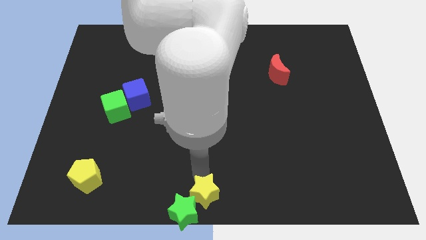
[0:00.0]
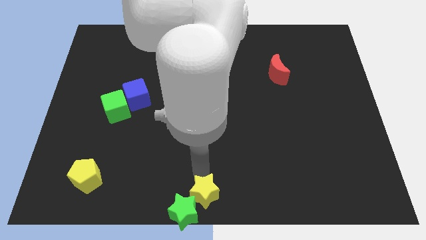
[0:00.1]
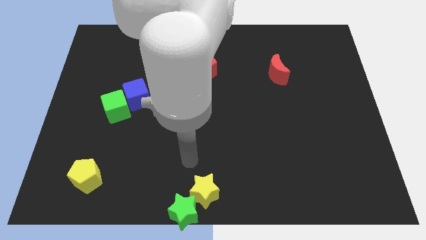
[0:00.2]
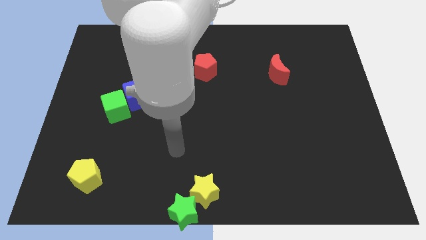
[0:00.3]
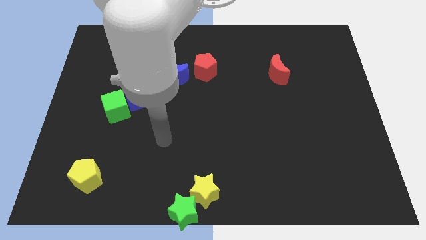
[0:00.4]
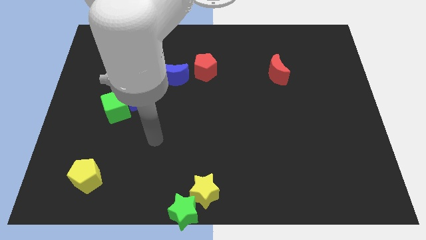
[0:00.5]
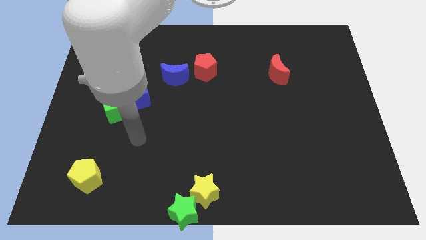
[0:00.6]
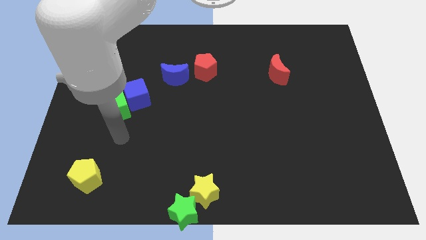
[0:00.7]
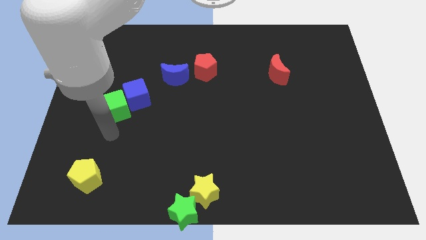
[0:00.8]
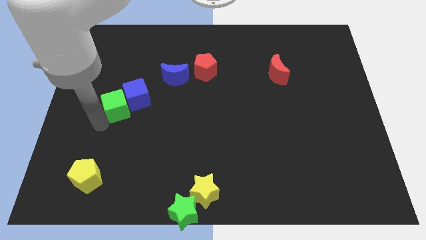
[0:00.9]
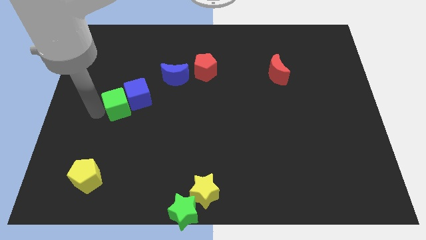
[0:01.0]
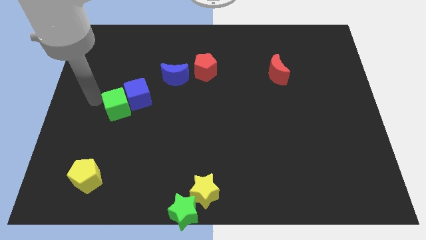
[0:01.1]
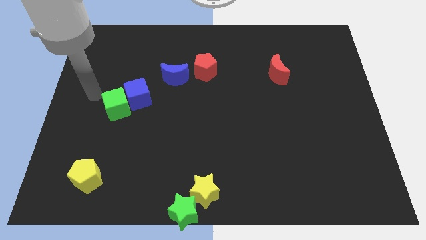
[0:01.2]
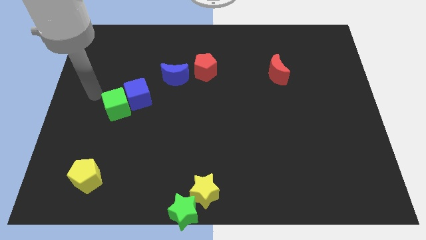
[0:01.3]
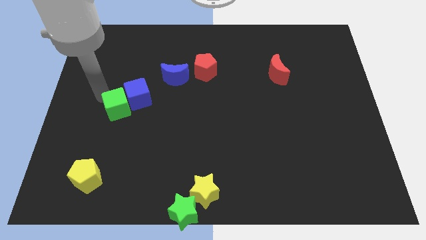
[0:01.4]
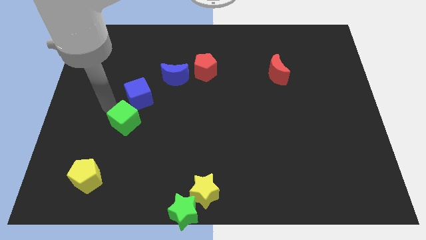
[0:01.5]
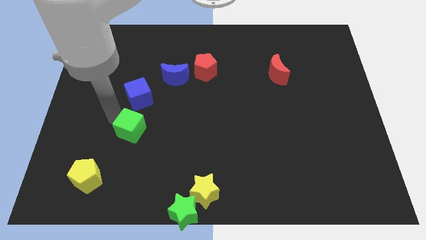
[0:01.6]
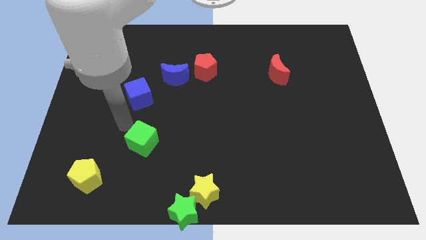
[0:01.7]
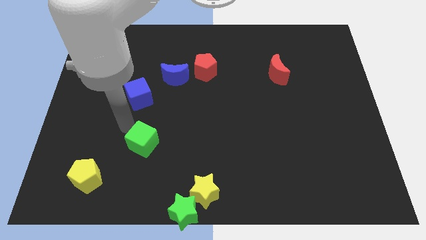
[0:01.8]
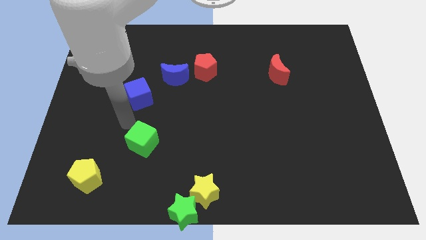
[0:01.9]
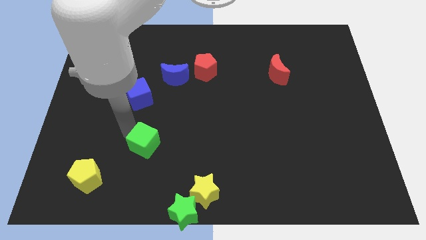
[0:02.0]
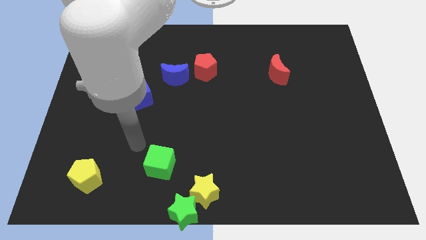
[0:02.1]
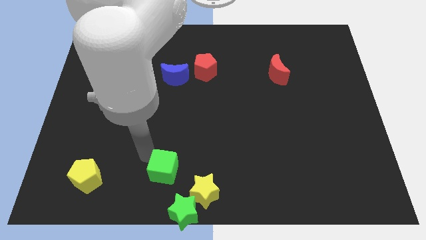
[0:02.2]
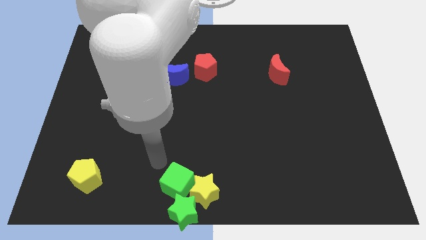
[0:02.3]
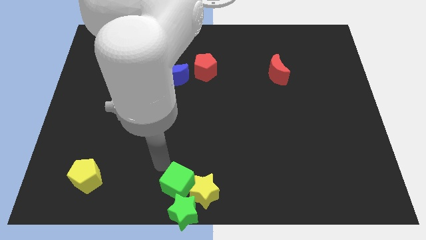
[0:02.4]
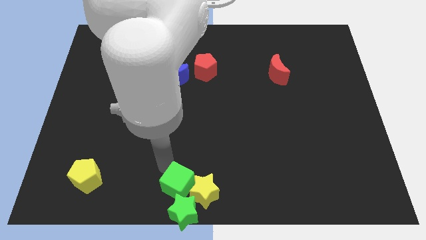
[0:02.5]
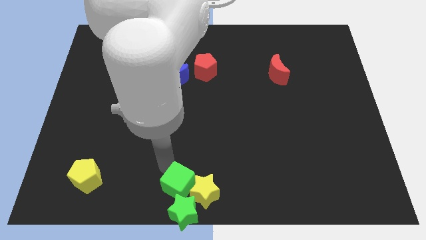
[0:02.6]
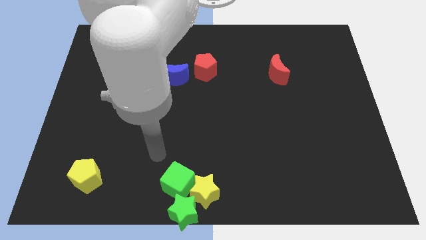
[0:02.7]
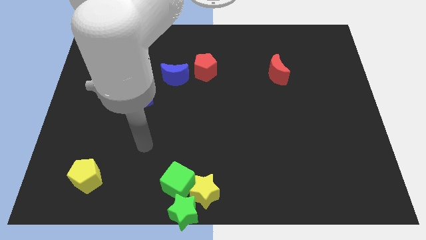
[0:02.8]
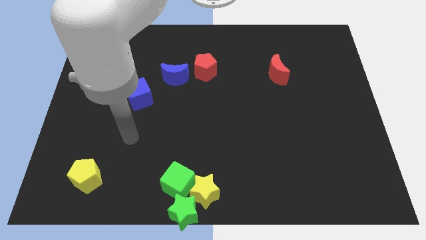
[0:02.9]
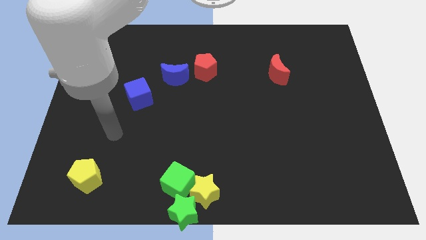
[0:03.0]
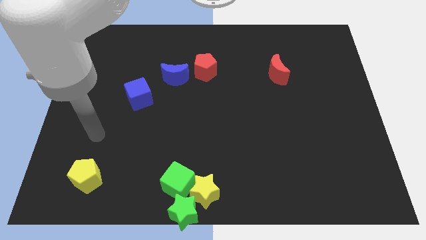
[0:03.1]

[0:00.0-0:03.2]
push the green cube towards the stars

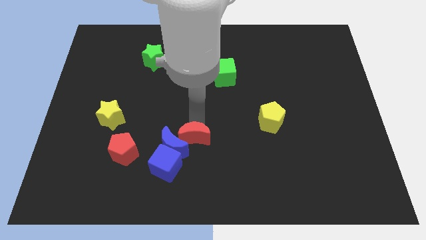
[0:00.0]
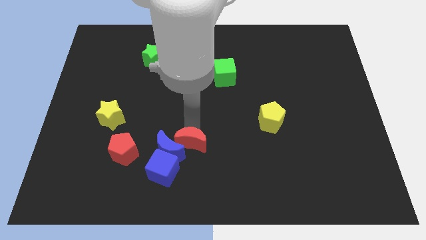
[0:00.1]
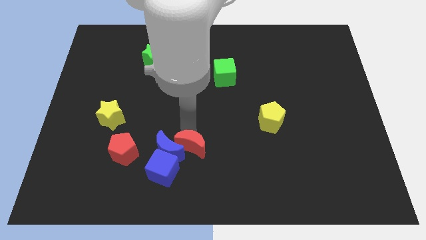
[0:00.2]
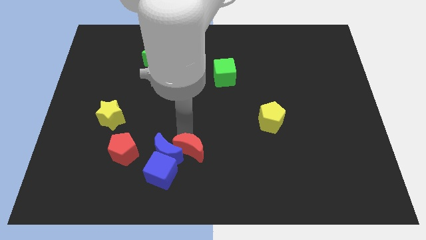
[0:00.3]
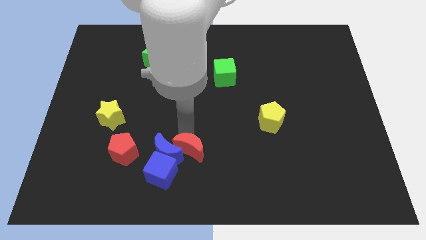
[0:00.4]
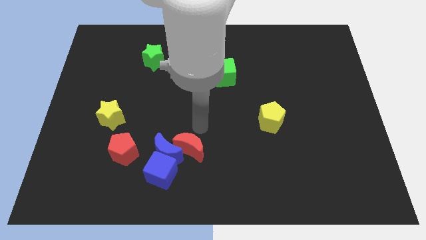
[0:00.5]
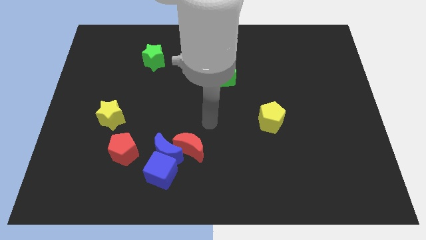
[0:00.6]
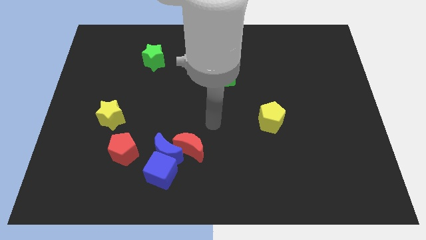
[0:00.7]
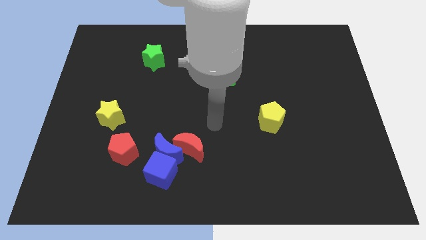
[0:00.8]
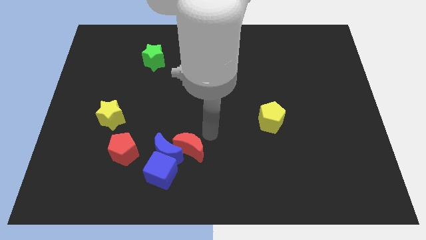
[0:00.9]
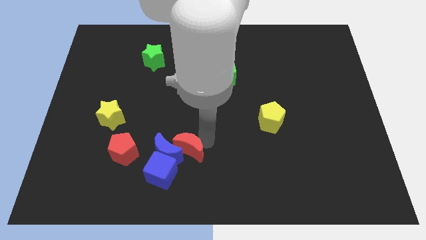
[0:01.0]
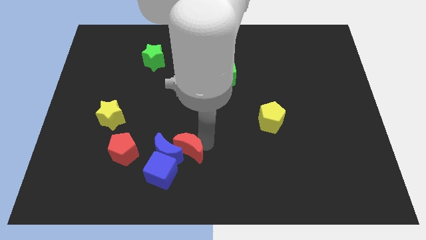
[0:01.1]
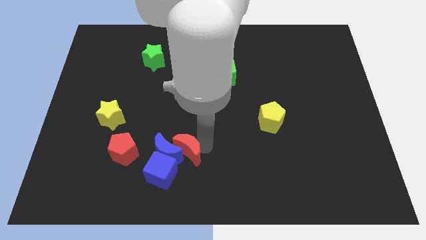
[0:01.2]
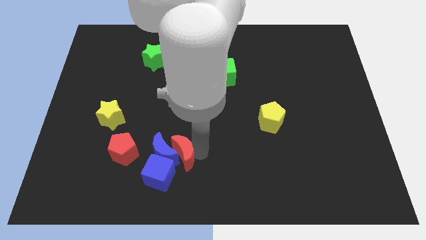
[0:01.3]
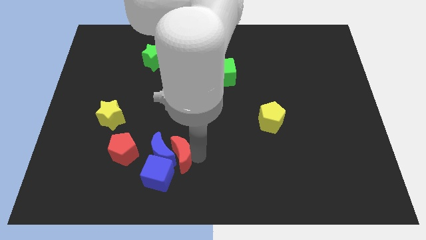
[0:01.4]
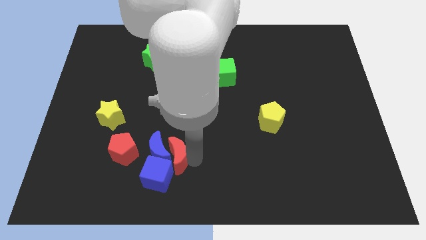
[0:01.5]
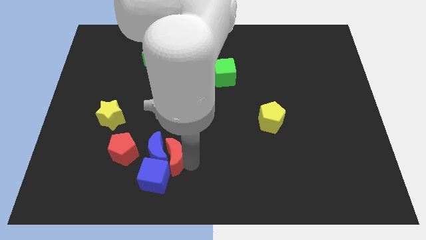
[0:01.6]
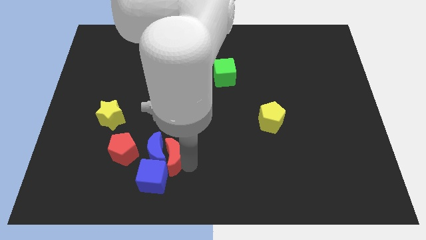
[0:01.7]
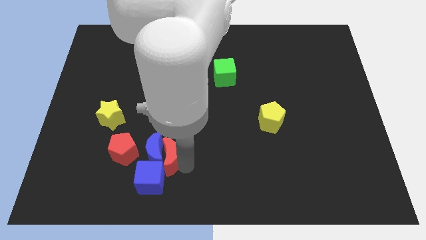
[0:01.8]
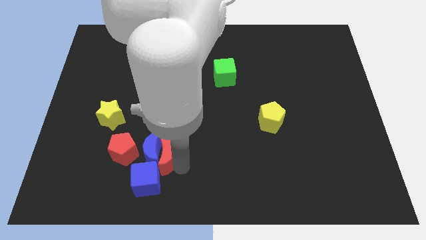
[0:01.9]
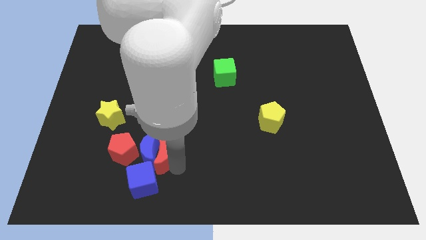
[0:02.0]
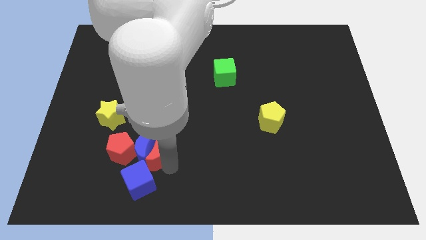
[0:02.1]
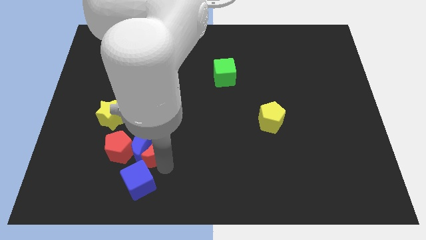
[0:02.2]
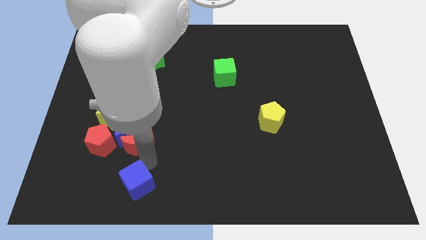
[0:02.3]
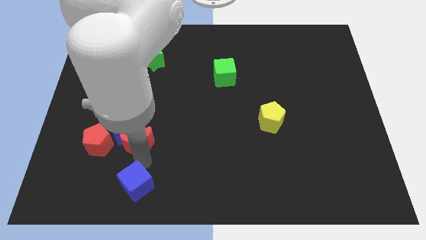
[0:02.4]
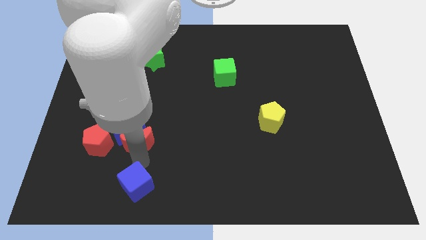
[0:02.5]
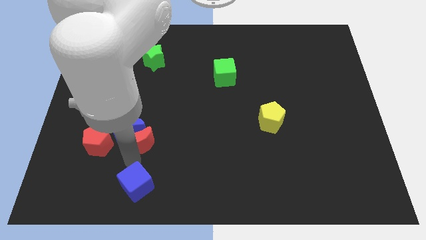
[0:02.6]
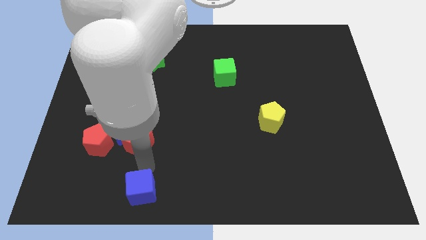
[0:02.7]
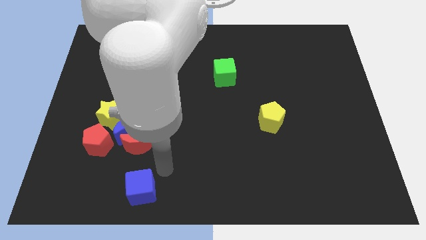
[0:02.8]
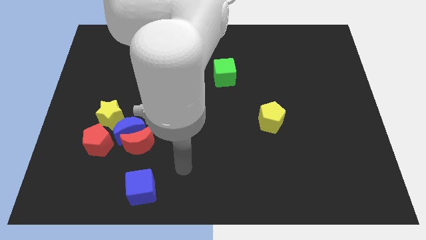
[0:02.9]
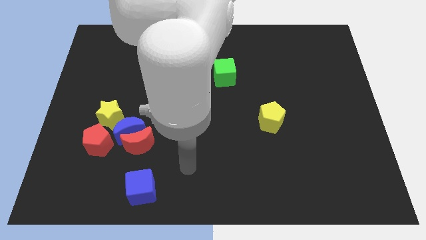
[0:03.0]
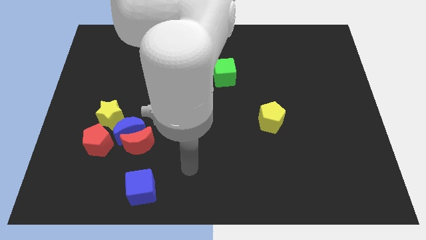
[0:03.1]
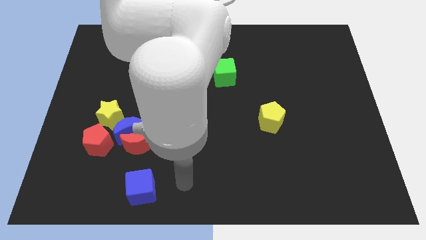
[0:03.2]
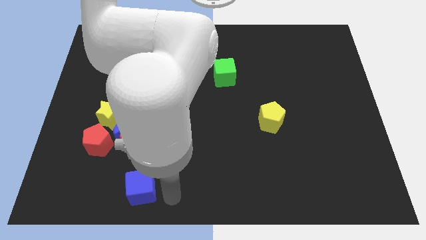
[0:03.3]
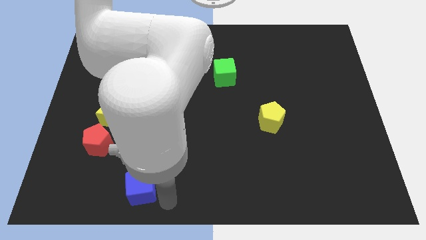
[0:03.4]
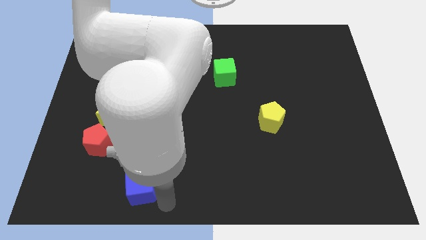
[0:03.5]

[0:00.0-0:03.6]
move the red and blue crescents to the left side

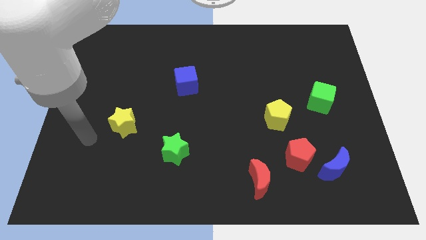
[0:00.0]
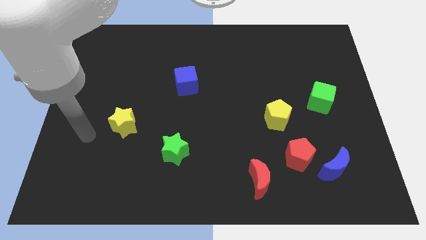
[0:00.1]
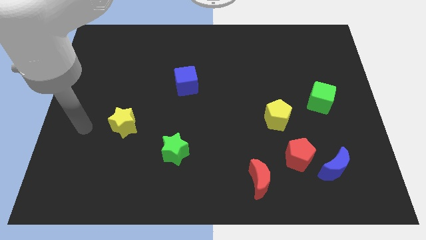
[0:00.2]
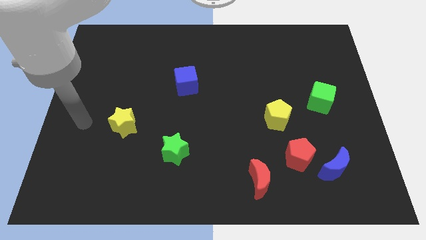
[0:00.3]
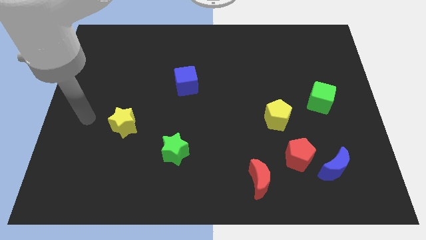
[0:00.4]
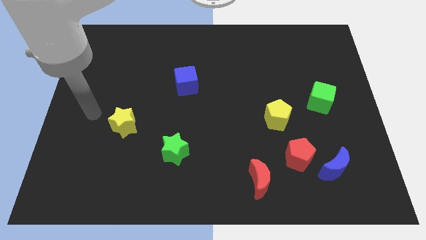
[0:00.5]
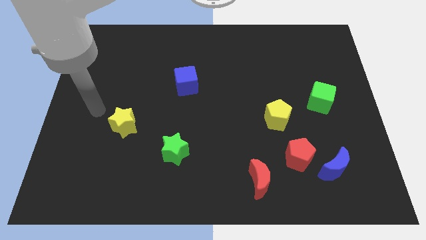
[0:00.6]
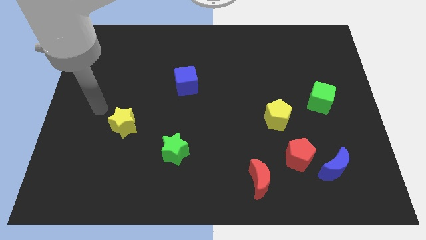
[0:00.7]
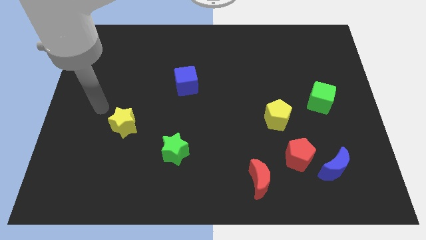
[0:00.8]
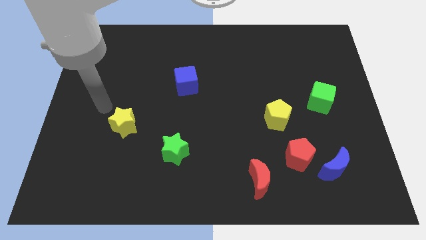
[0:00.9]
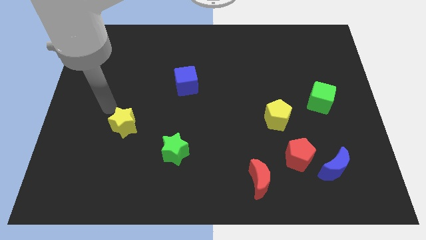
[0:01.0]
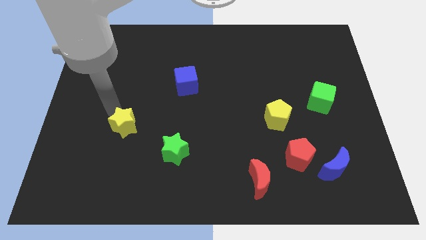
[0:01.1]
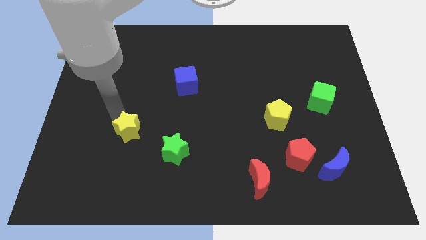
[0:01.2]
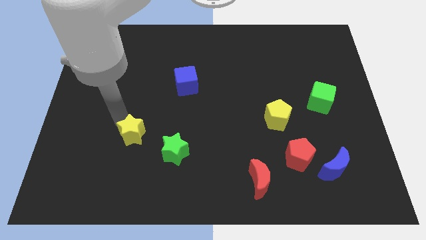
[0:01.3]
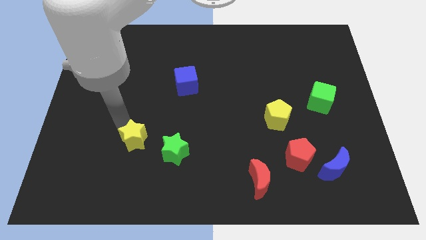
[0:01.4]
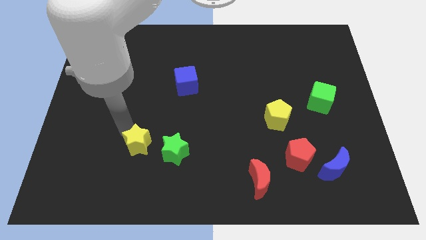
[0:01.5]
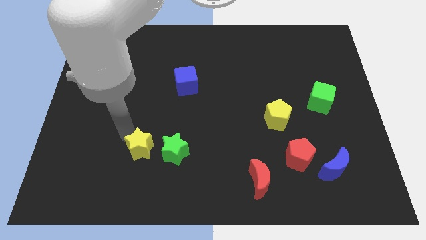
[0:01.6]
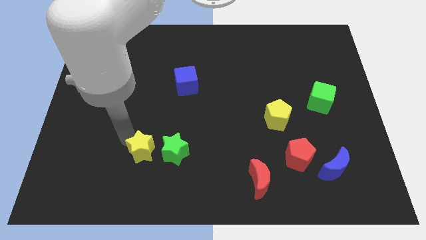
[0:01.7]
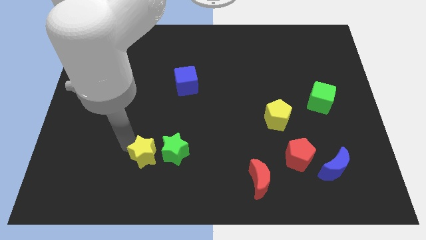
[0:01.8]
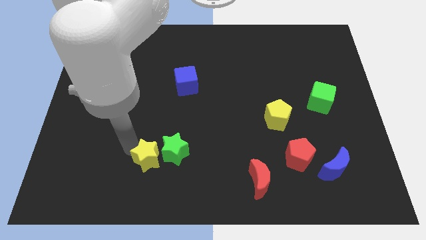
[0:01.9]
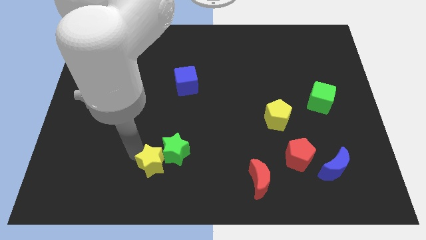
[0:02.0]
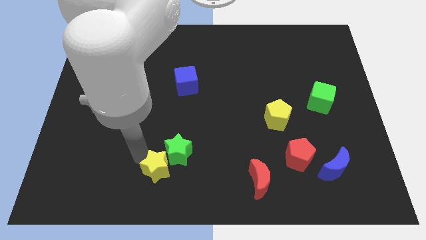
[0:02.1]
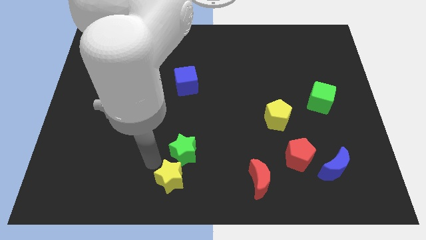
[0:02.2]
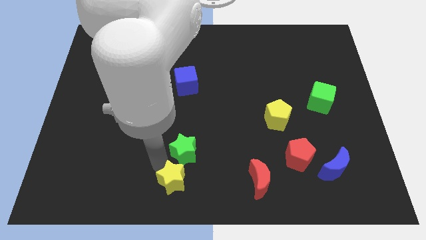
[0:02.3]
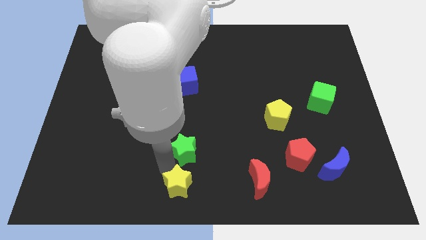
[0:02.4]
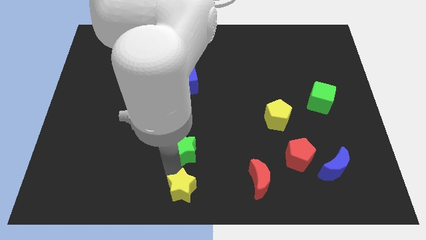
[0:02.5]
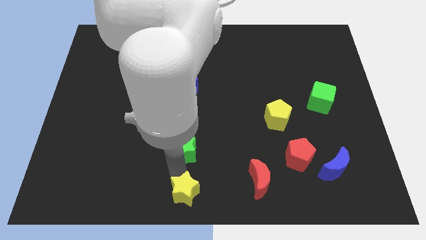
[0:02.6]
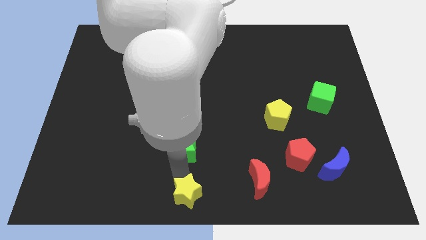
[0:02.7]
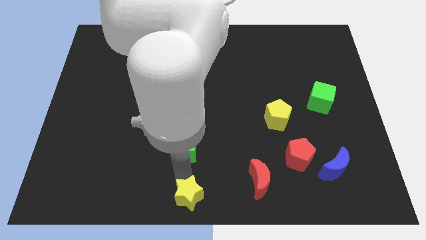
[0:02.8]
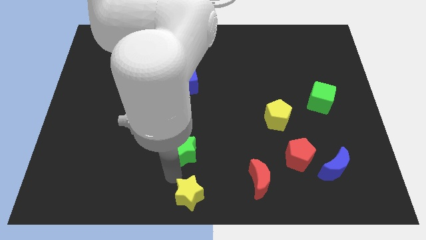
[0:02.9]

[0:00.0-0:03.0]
move the yellow star below the vertical line of green star and blue cube
